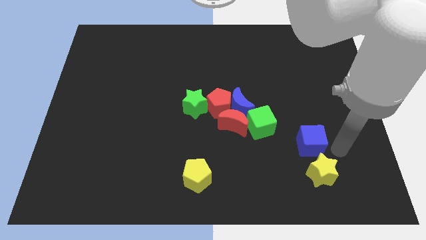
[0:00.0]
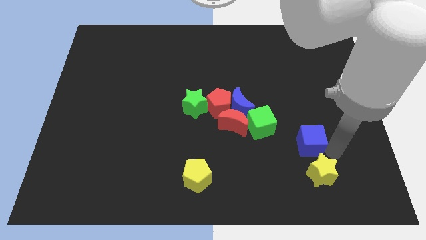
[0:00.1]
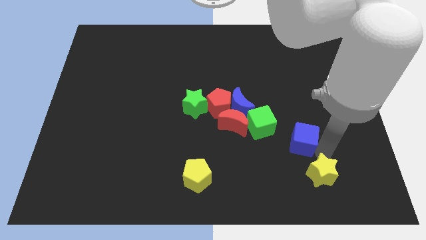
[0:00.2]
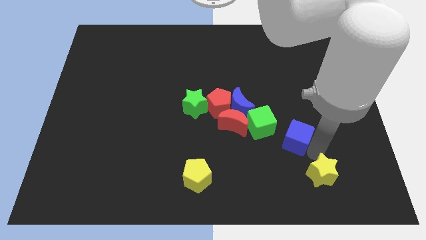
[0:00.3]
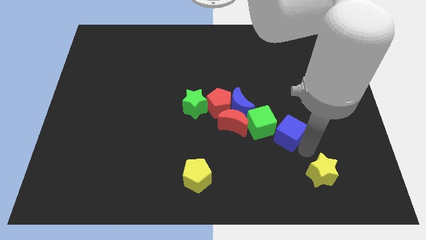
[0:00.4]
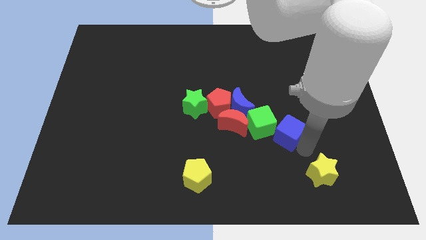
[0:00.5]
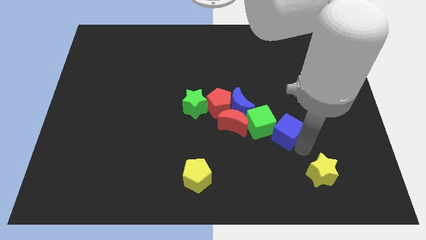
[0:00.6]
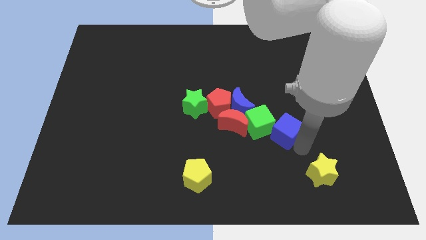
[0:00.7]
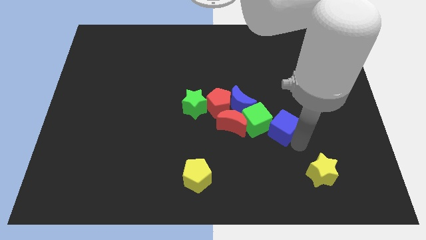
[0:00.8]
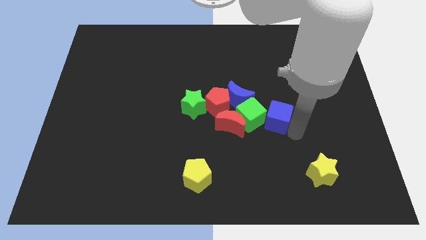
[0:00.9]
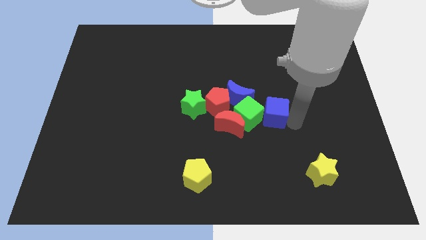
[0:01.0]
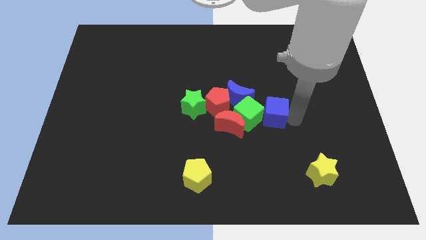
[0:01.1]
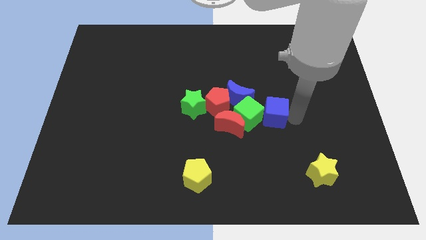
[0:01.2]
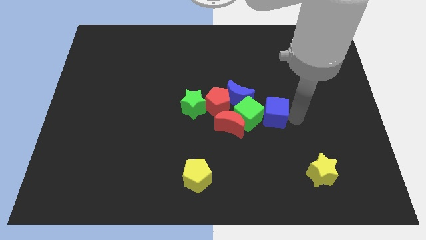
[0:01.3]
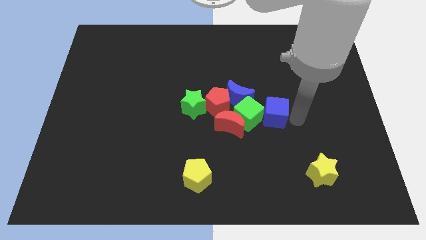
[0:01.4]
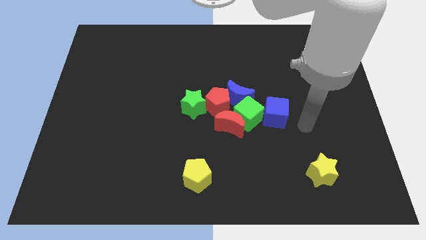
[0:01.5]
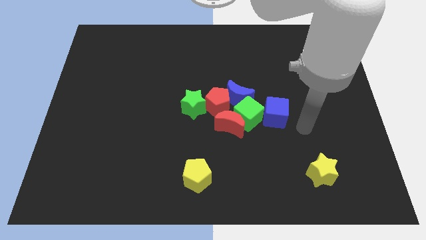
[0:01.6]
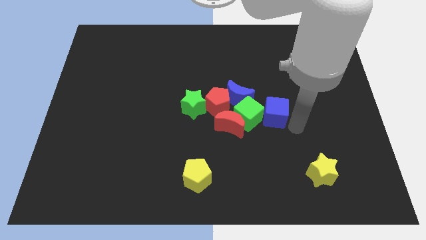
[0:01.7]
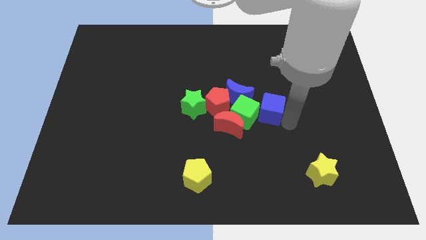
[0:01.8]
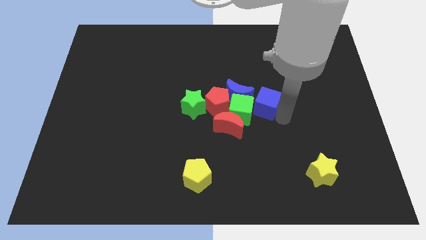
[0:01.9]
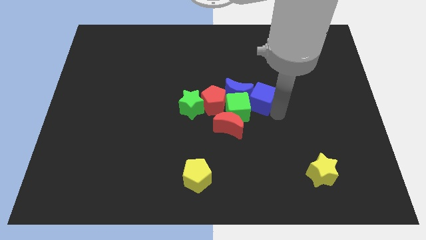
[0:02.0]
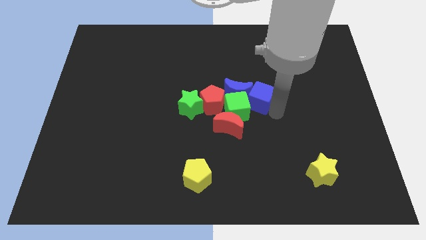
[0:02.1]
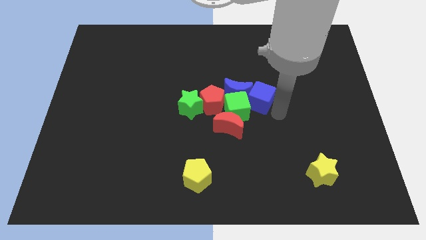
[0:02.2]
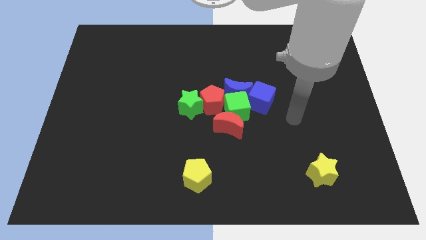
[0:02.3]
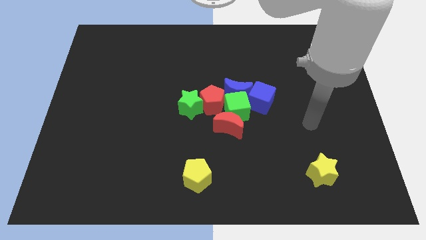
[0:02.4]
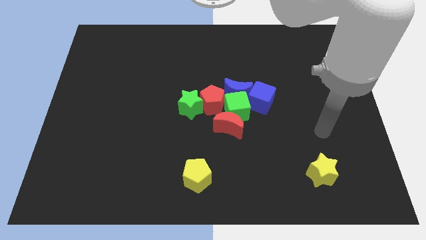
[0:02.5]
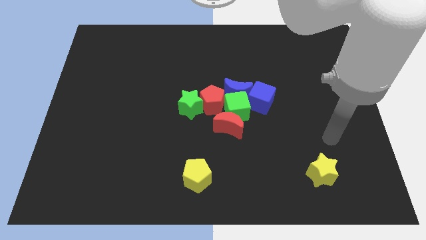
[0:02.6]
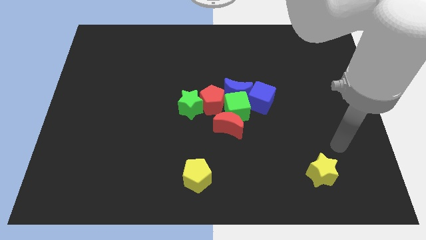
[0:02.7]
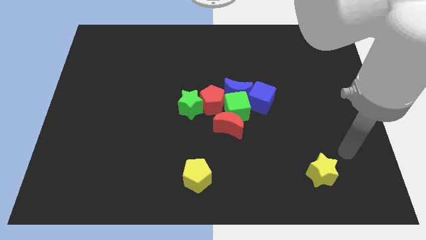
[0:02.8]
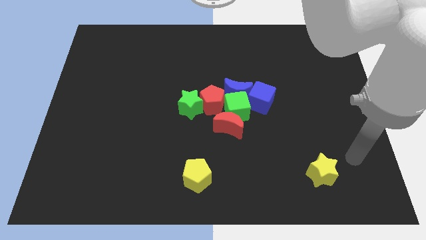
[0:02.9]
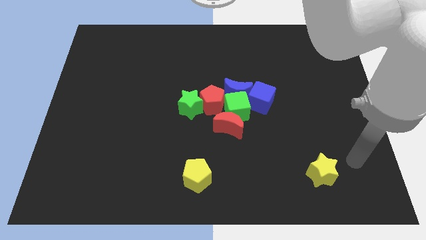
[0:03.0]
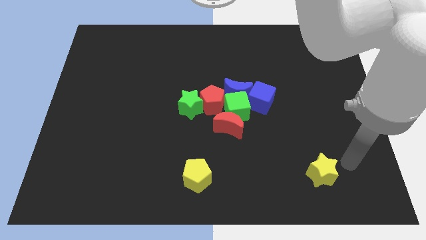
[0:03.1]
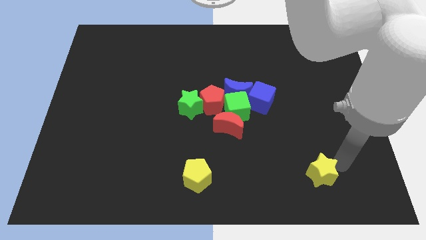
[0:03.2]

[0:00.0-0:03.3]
move the blue cube into the right side of the blue crescent

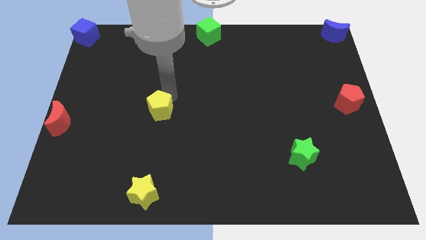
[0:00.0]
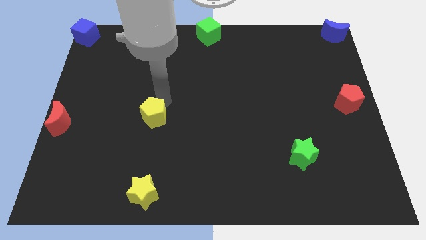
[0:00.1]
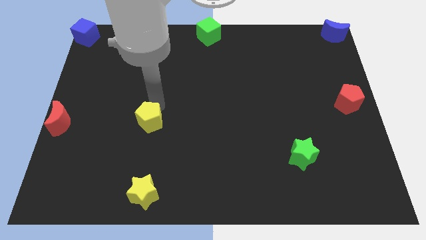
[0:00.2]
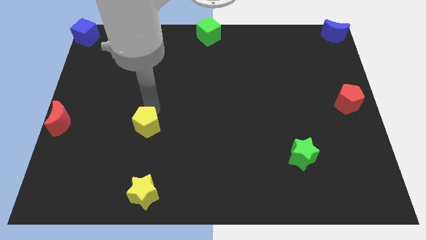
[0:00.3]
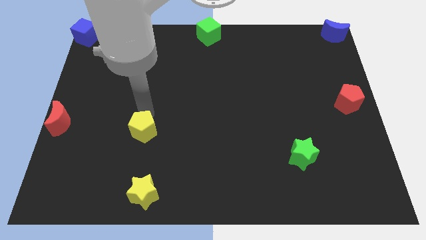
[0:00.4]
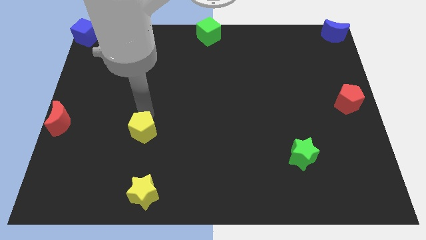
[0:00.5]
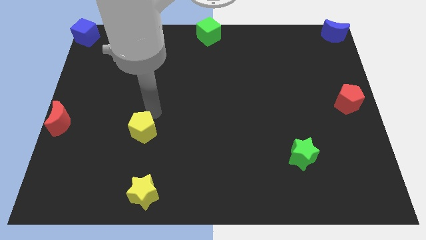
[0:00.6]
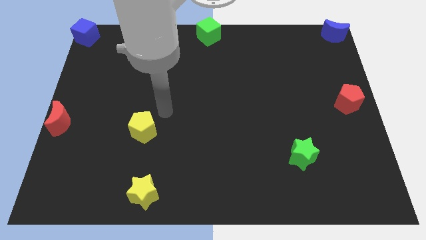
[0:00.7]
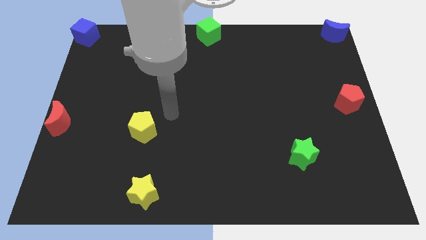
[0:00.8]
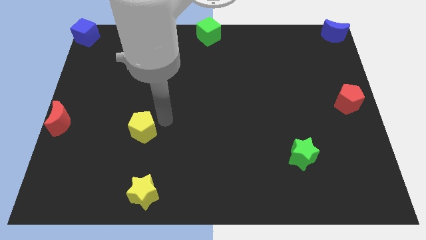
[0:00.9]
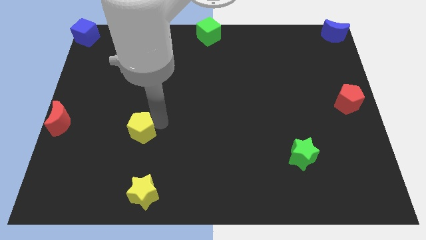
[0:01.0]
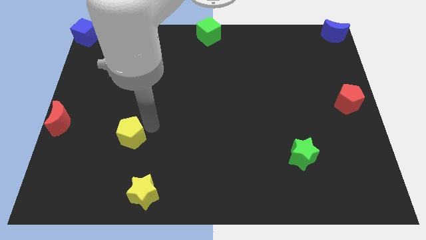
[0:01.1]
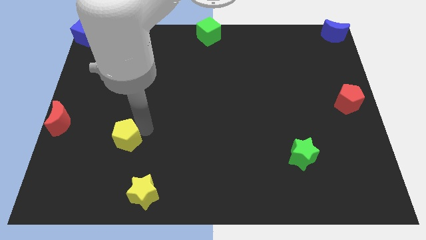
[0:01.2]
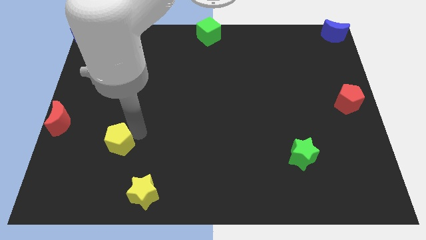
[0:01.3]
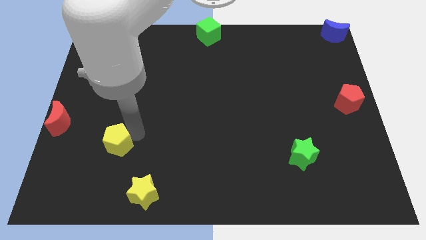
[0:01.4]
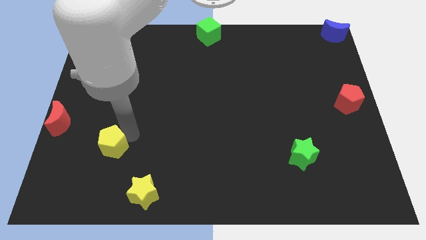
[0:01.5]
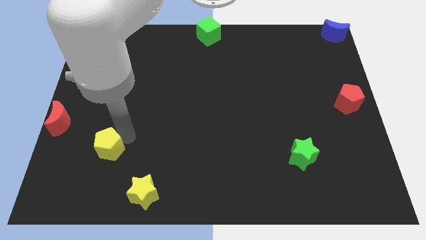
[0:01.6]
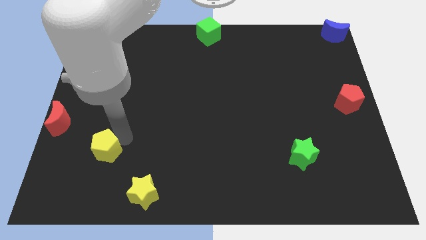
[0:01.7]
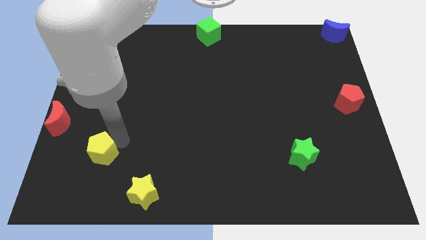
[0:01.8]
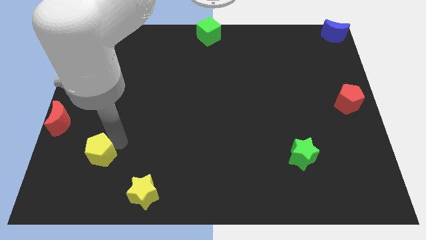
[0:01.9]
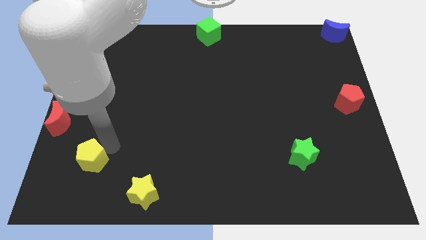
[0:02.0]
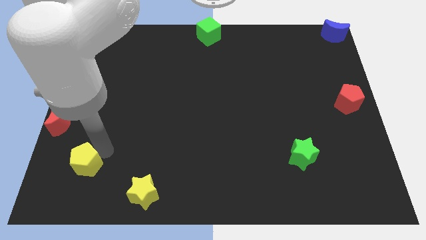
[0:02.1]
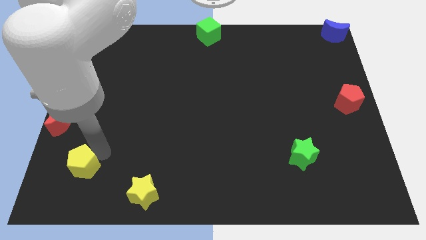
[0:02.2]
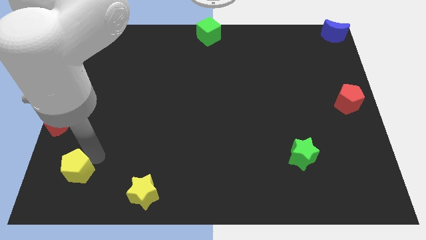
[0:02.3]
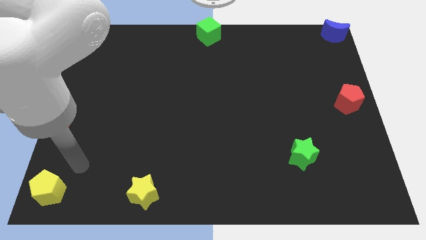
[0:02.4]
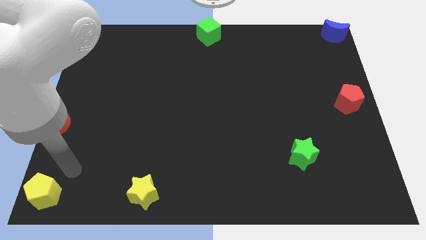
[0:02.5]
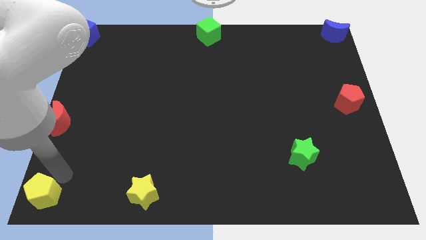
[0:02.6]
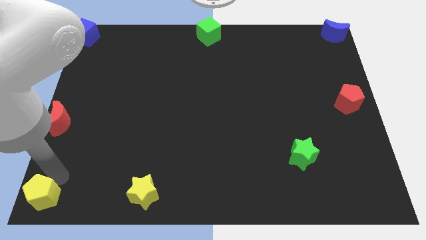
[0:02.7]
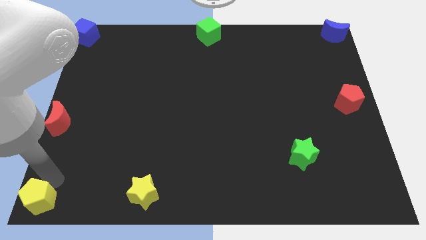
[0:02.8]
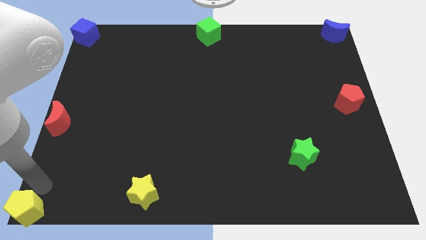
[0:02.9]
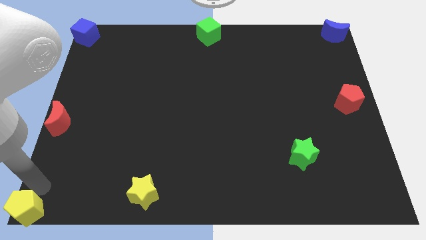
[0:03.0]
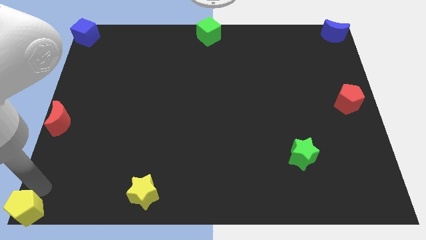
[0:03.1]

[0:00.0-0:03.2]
place the yellow pentagon at the bottom left corner of the board

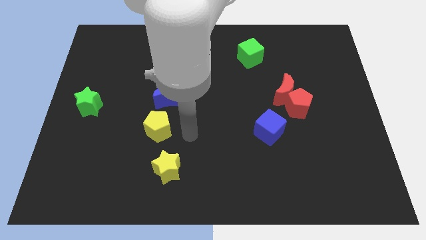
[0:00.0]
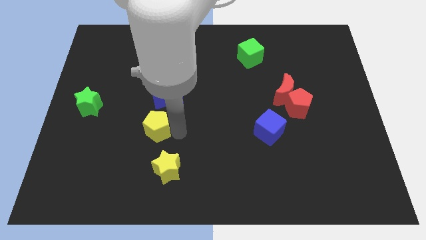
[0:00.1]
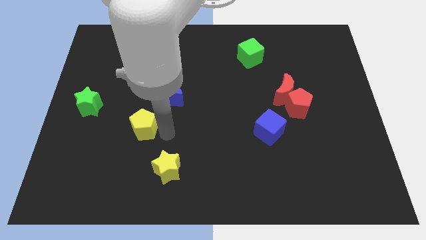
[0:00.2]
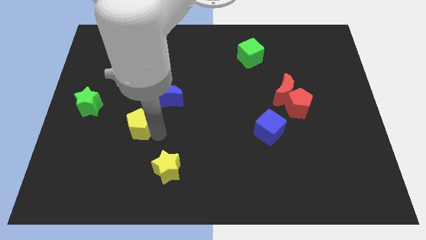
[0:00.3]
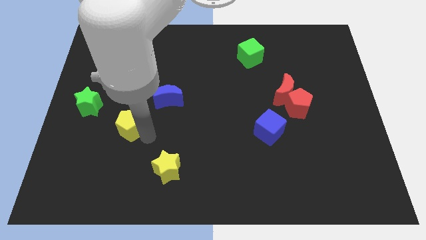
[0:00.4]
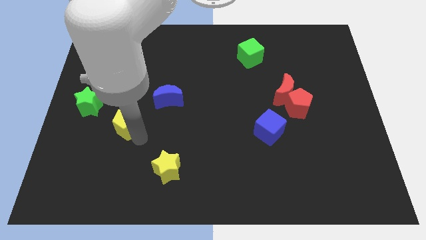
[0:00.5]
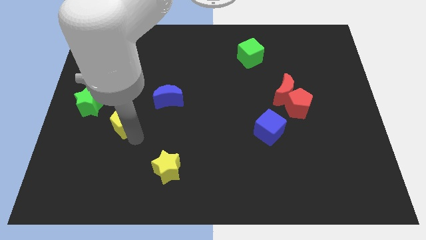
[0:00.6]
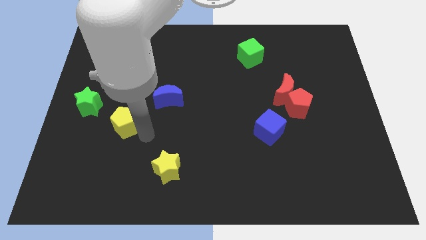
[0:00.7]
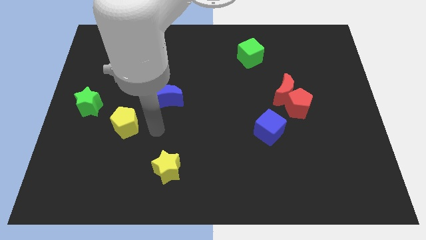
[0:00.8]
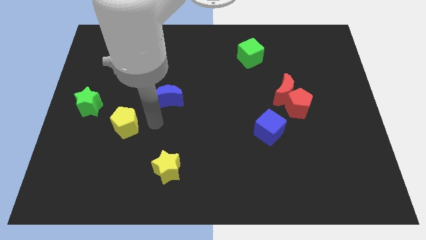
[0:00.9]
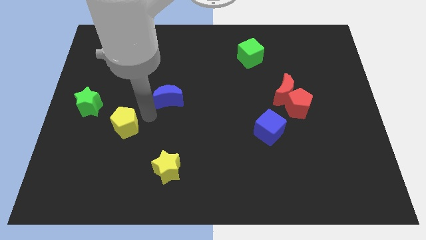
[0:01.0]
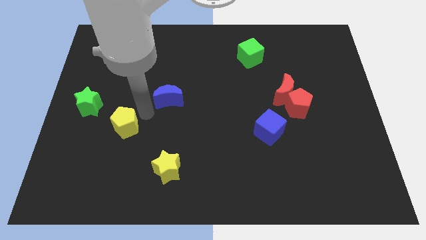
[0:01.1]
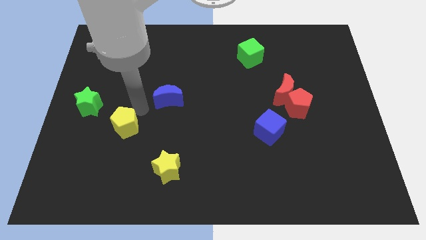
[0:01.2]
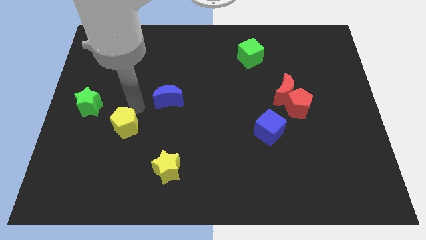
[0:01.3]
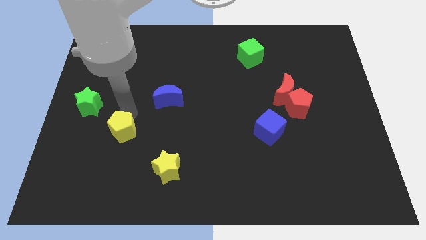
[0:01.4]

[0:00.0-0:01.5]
slide the yellow pentagon to the left

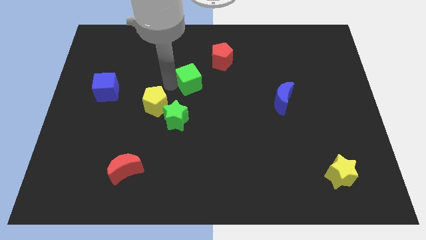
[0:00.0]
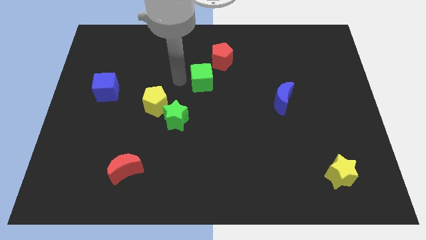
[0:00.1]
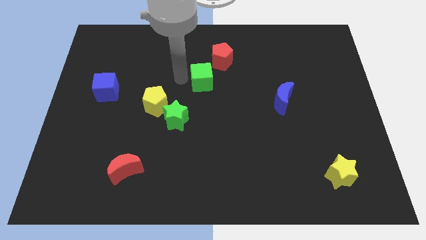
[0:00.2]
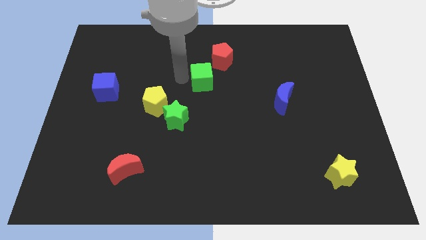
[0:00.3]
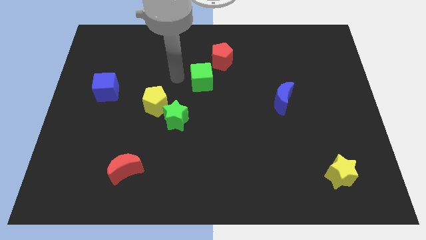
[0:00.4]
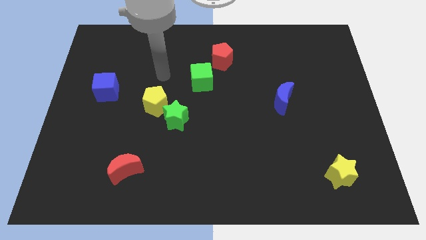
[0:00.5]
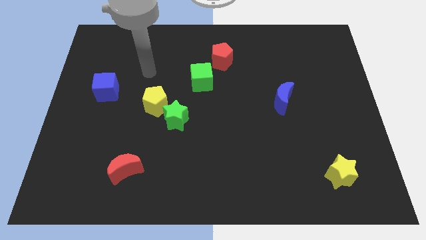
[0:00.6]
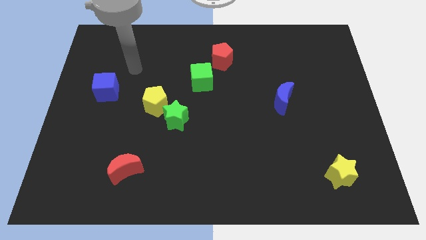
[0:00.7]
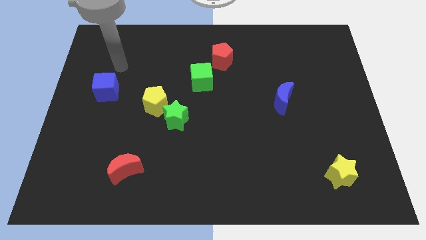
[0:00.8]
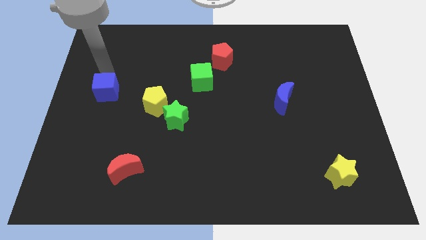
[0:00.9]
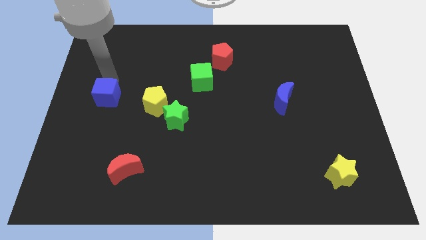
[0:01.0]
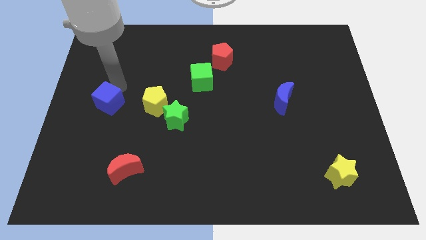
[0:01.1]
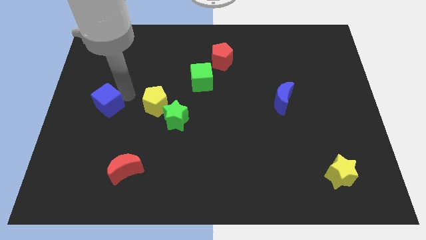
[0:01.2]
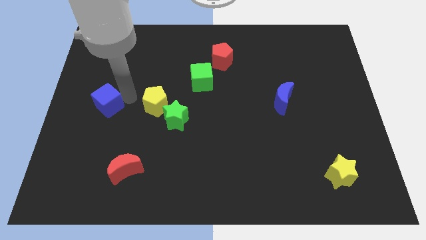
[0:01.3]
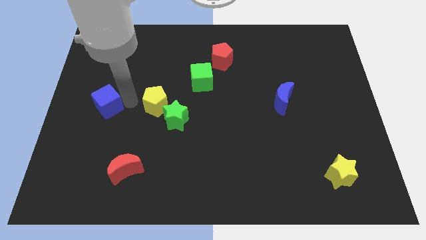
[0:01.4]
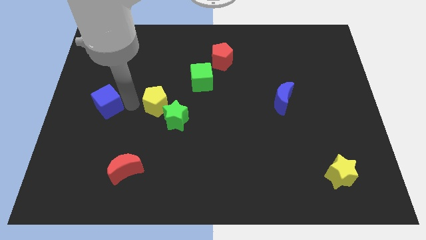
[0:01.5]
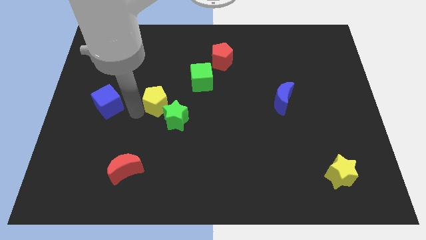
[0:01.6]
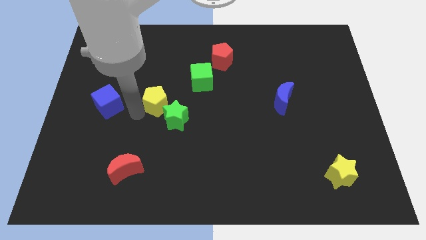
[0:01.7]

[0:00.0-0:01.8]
move the blue cube to the left of the yellow pentagon
